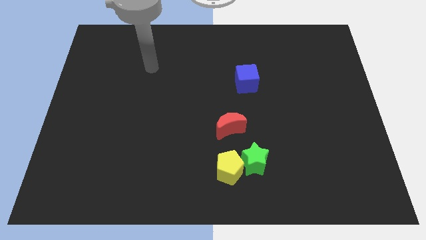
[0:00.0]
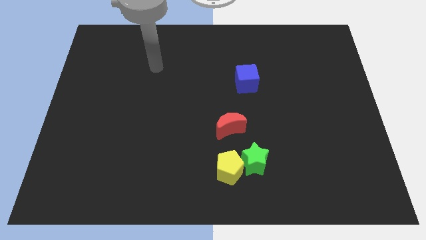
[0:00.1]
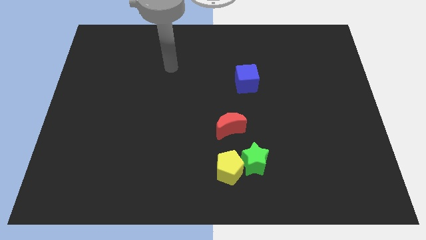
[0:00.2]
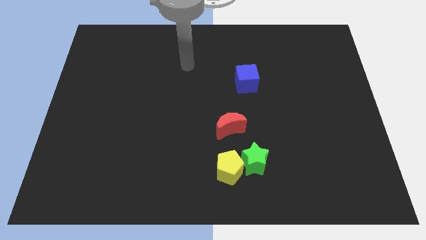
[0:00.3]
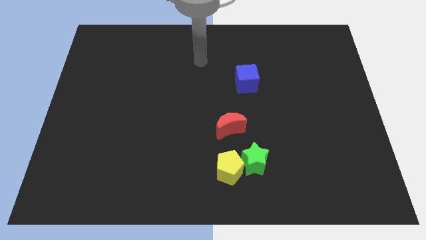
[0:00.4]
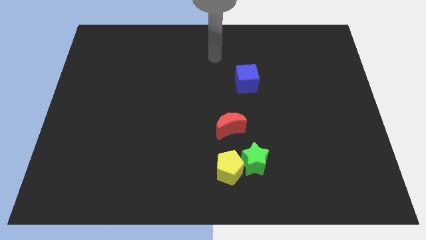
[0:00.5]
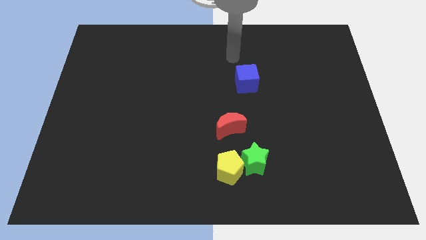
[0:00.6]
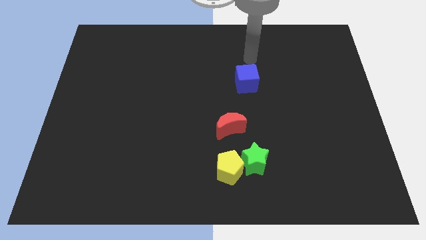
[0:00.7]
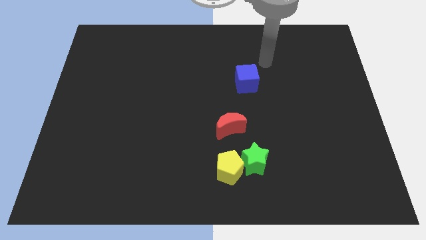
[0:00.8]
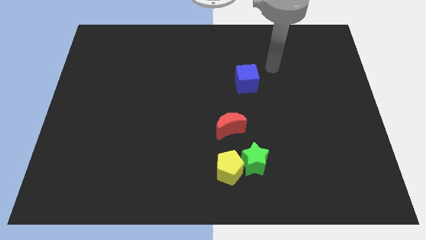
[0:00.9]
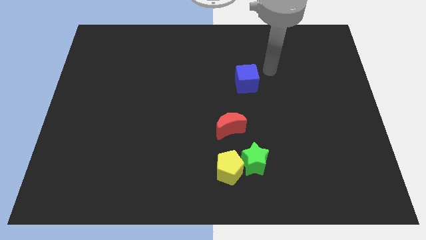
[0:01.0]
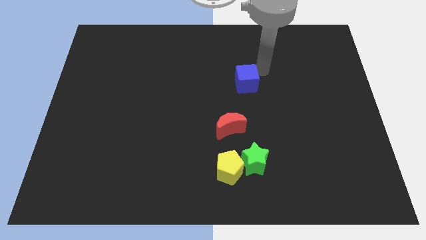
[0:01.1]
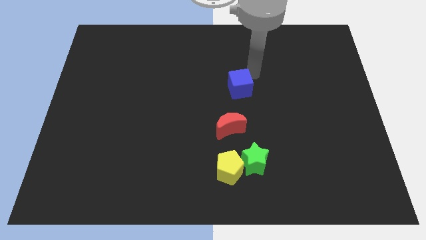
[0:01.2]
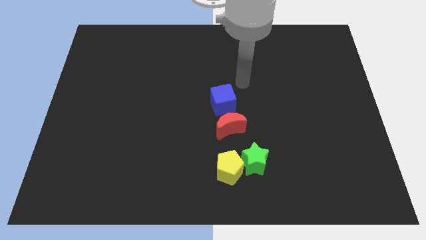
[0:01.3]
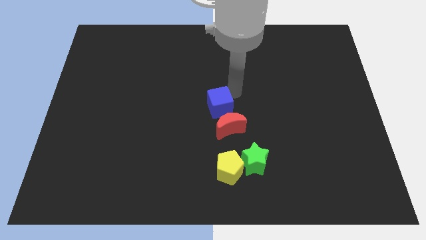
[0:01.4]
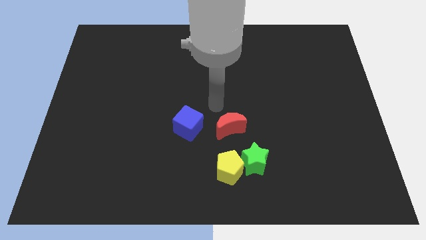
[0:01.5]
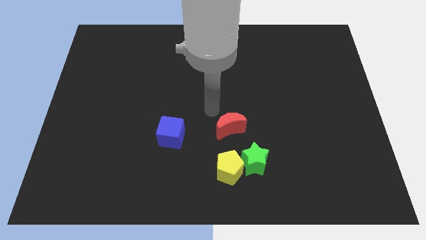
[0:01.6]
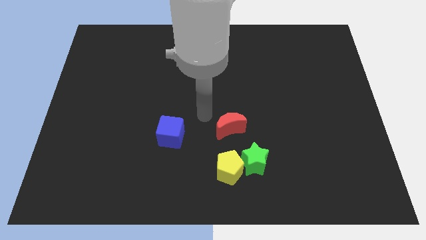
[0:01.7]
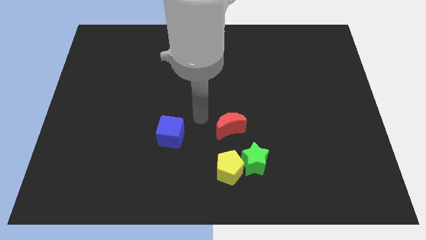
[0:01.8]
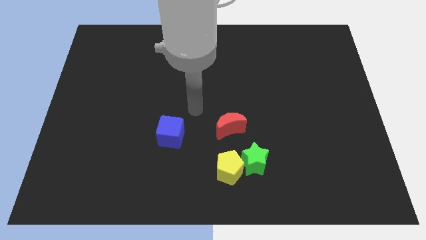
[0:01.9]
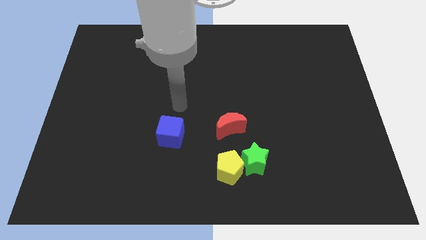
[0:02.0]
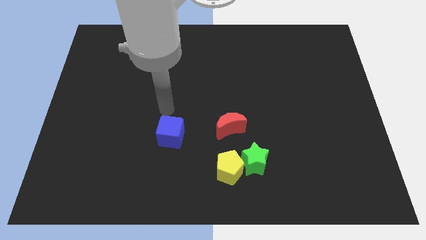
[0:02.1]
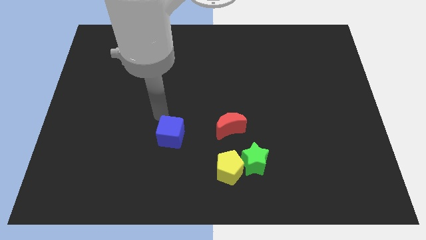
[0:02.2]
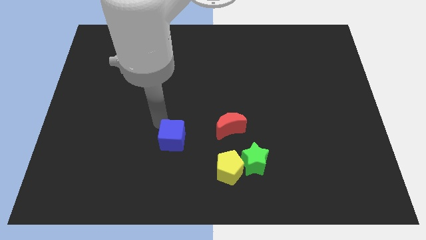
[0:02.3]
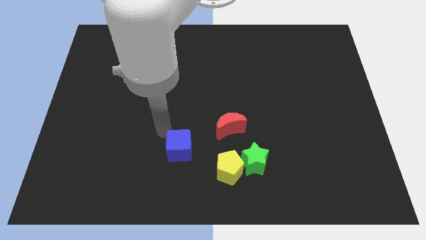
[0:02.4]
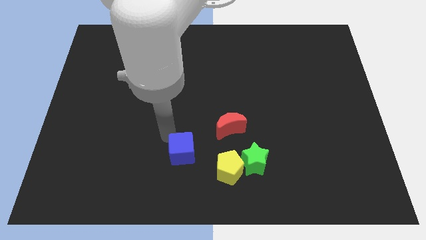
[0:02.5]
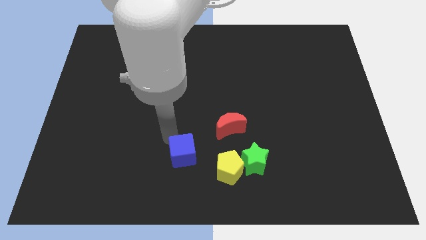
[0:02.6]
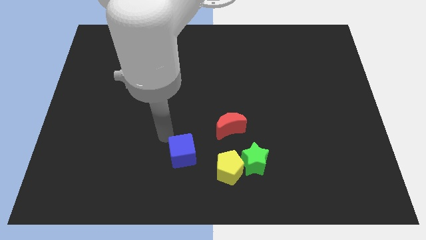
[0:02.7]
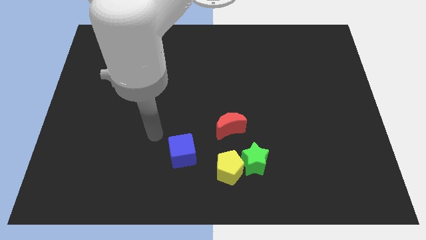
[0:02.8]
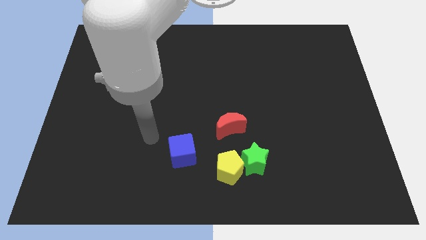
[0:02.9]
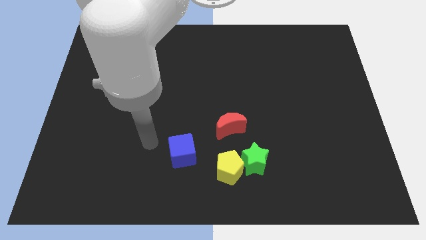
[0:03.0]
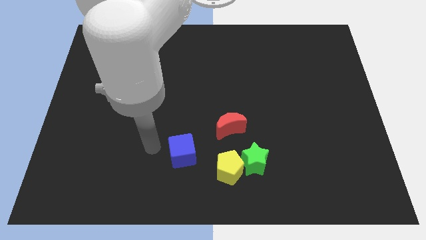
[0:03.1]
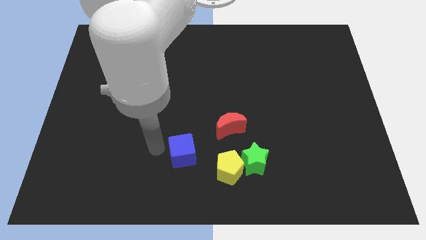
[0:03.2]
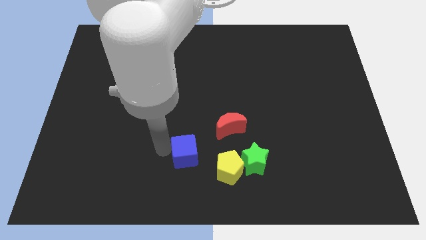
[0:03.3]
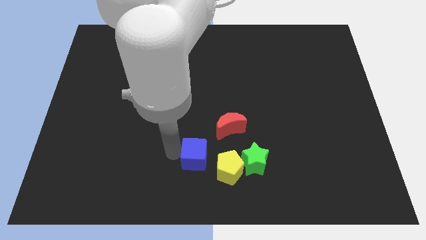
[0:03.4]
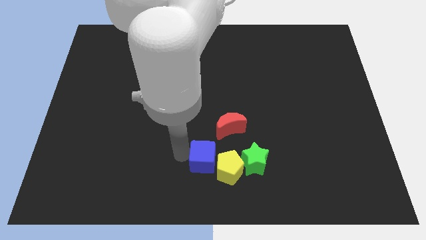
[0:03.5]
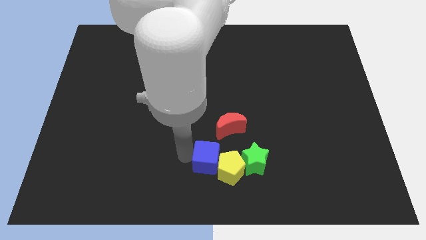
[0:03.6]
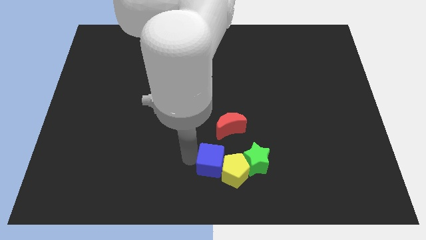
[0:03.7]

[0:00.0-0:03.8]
push the blue block to the pentagon

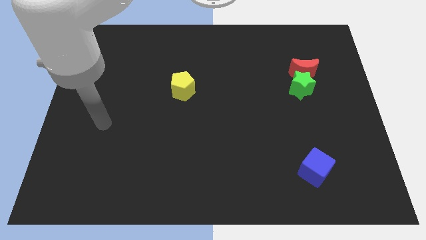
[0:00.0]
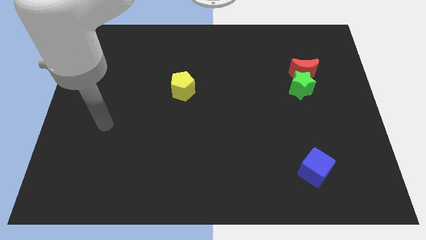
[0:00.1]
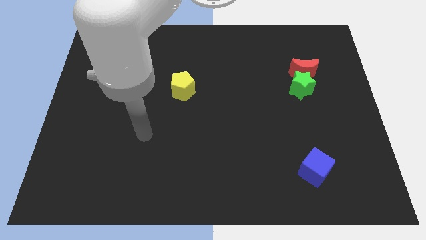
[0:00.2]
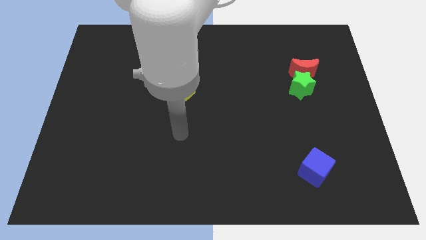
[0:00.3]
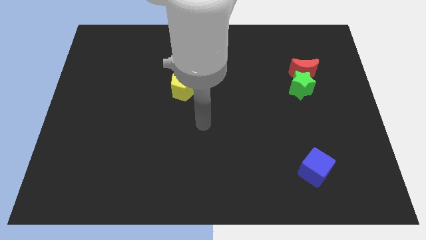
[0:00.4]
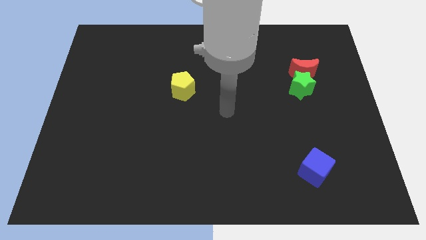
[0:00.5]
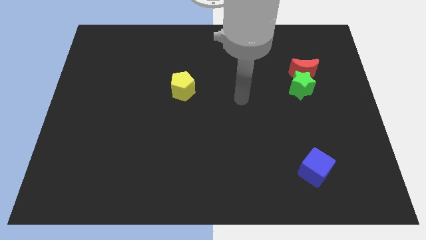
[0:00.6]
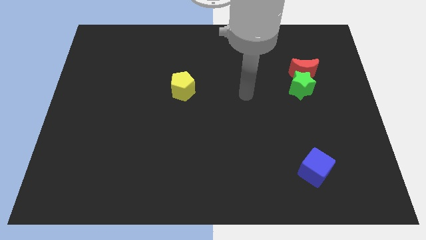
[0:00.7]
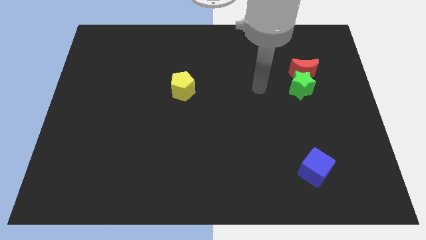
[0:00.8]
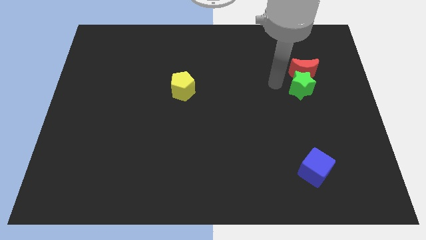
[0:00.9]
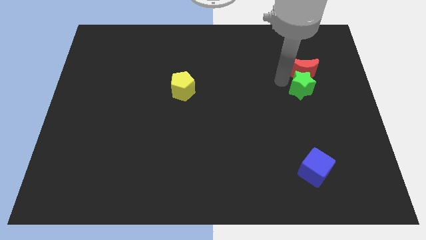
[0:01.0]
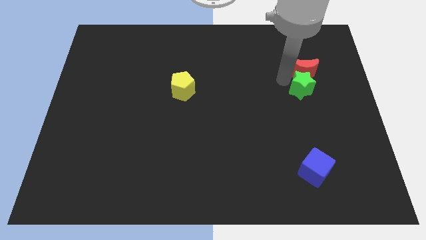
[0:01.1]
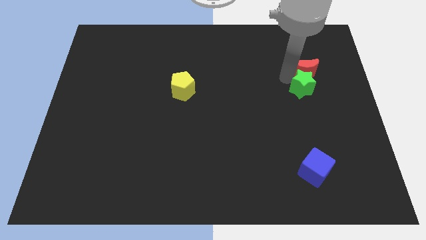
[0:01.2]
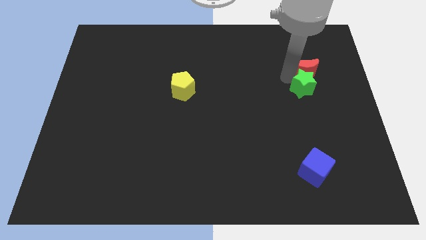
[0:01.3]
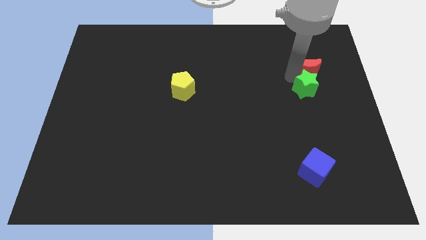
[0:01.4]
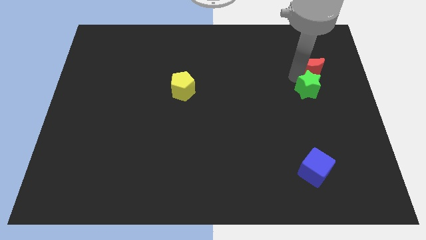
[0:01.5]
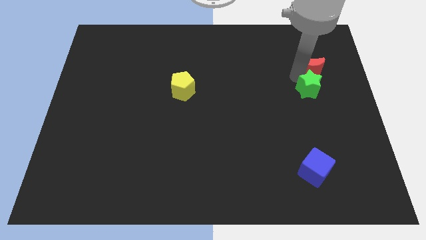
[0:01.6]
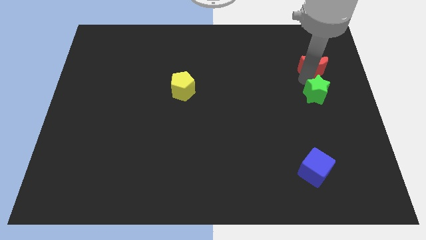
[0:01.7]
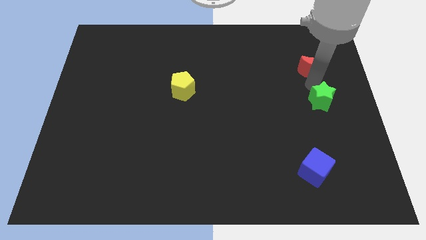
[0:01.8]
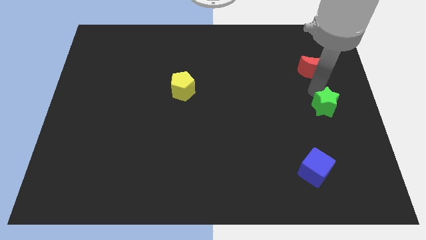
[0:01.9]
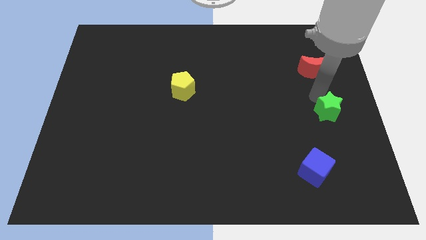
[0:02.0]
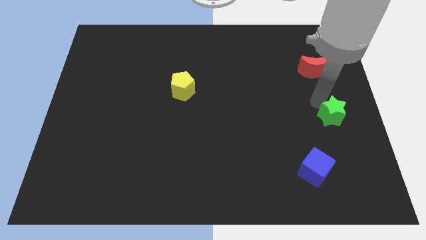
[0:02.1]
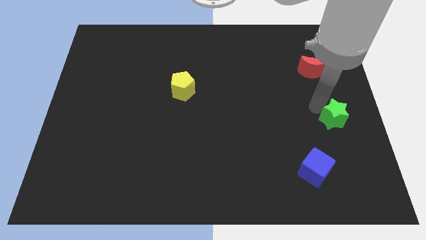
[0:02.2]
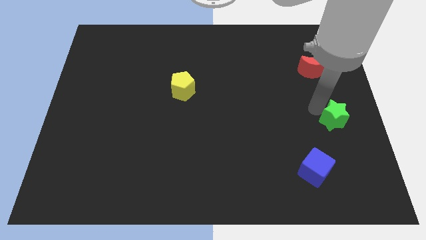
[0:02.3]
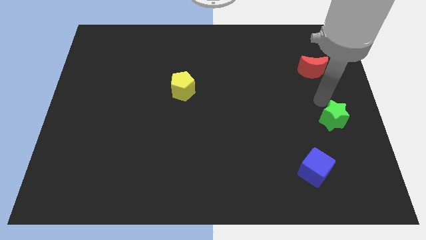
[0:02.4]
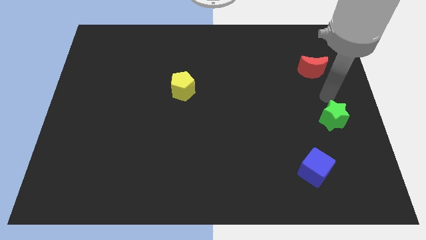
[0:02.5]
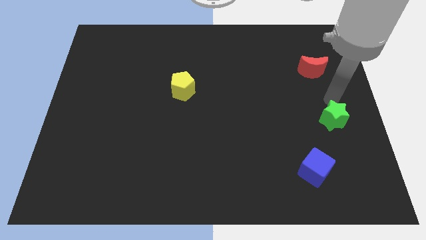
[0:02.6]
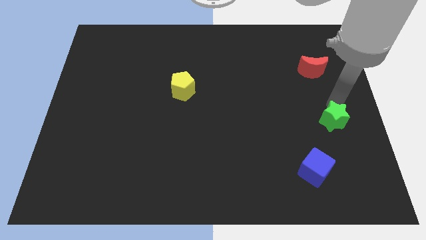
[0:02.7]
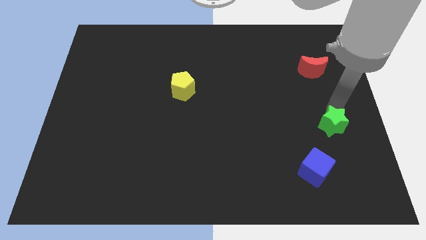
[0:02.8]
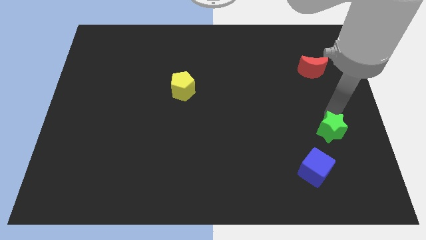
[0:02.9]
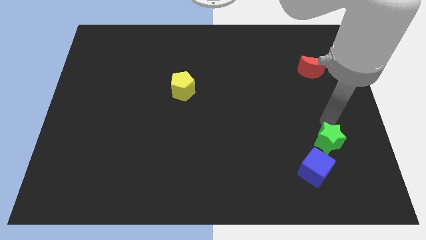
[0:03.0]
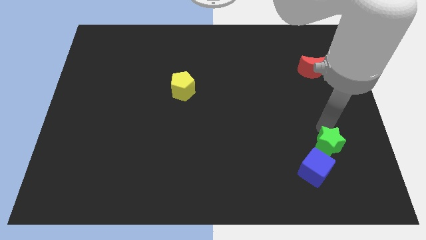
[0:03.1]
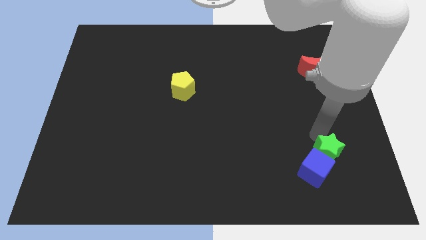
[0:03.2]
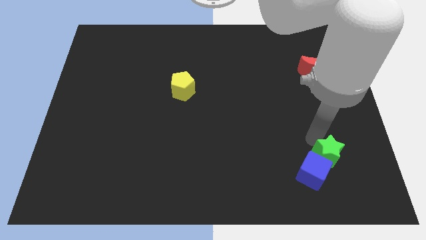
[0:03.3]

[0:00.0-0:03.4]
push the star towards the cube

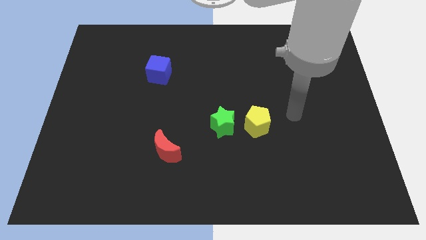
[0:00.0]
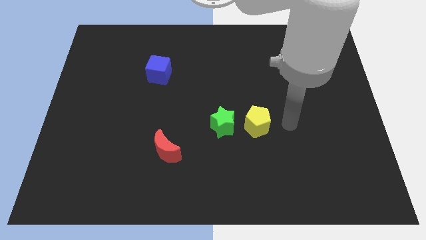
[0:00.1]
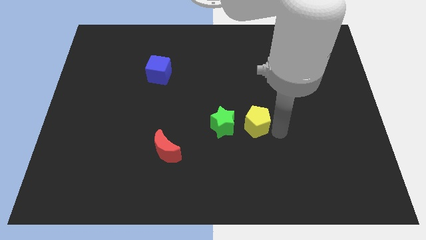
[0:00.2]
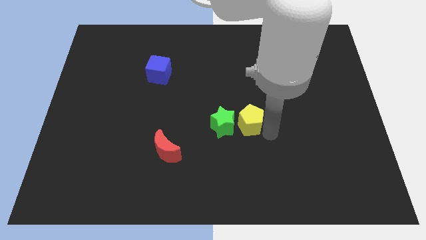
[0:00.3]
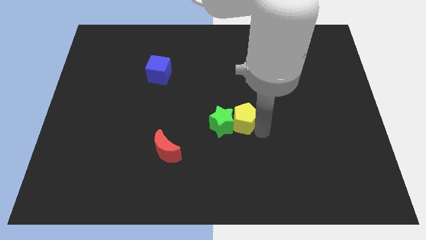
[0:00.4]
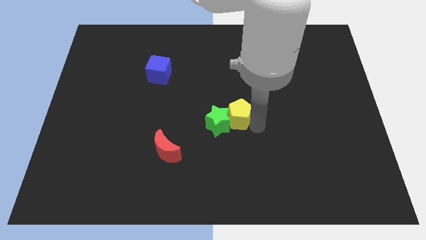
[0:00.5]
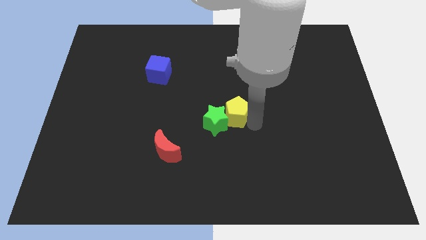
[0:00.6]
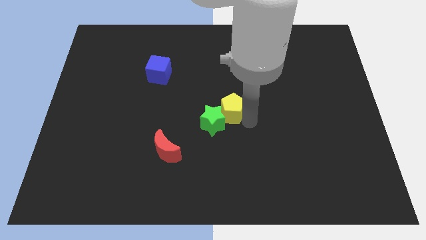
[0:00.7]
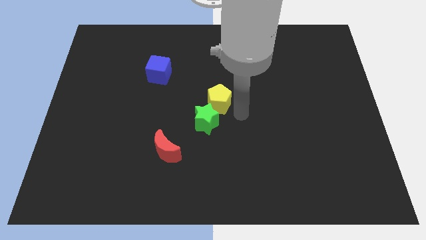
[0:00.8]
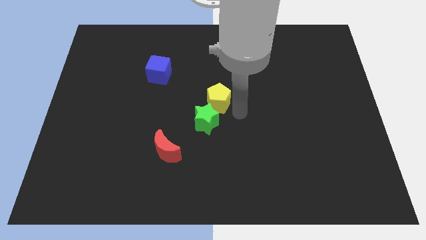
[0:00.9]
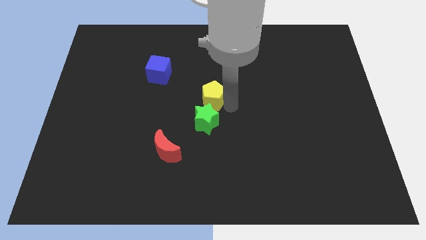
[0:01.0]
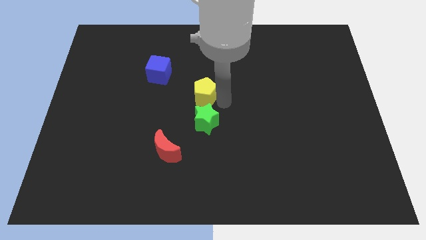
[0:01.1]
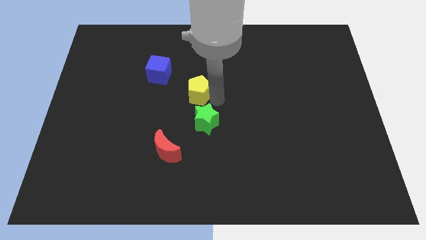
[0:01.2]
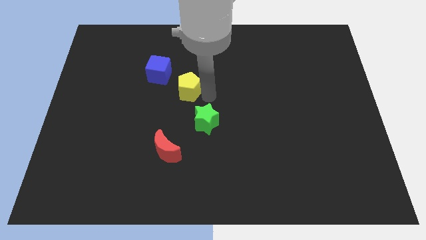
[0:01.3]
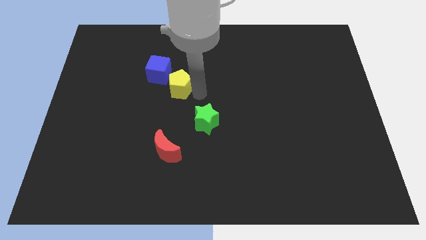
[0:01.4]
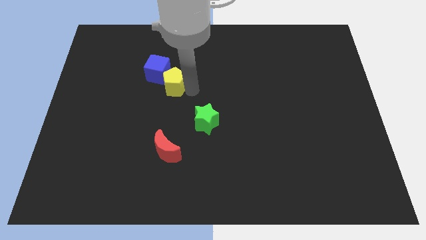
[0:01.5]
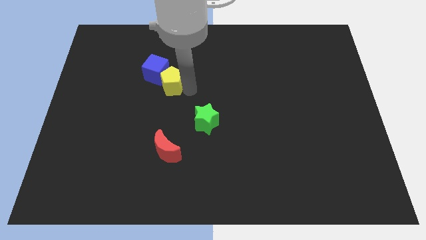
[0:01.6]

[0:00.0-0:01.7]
slide the yellow block towards the blue block
